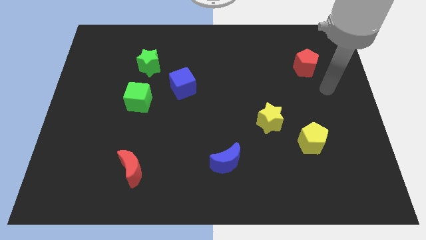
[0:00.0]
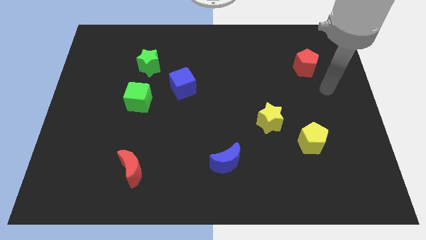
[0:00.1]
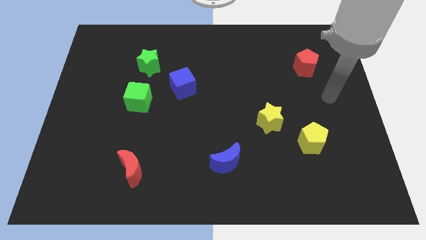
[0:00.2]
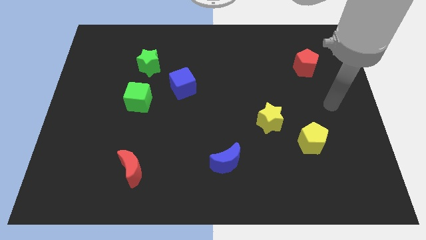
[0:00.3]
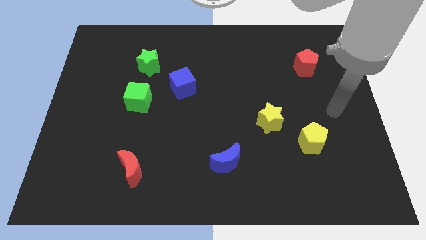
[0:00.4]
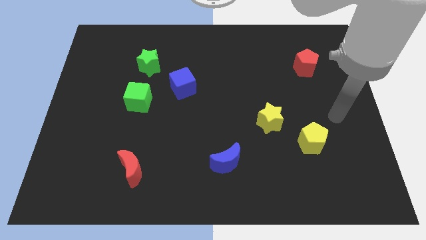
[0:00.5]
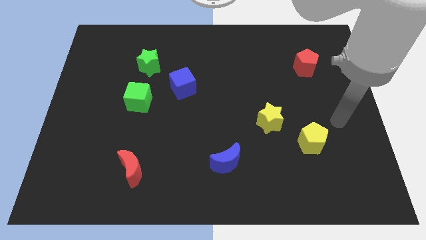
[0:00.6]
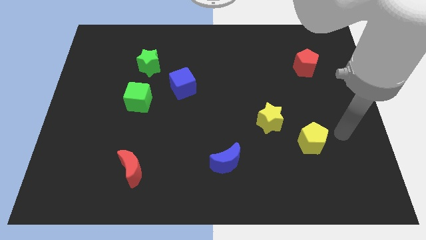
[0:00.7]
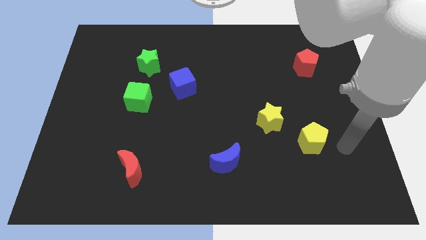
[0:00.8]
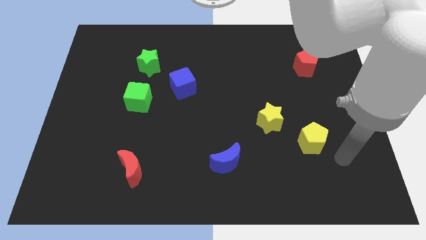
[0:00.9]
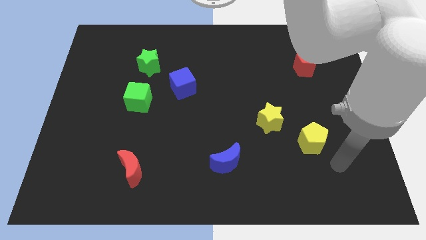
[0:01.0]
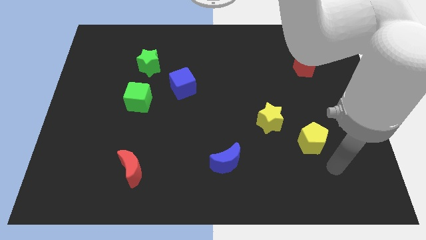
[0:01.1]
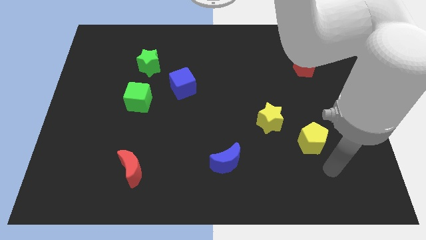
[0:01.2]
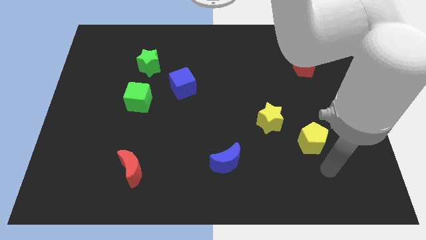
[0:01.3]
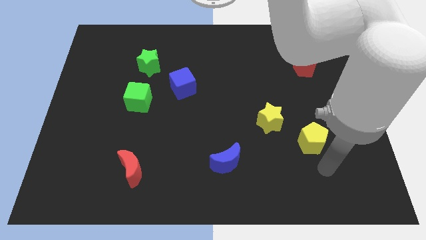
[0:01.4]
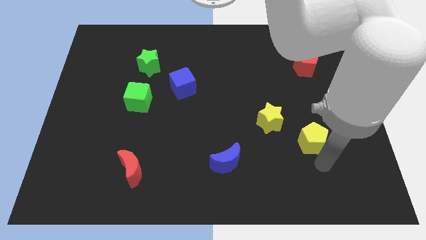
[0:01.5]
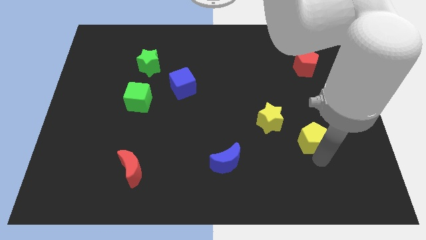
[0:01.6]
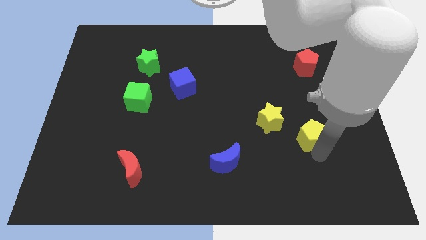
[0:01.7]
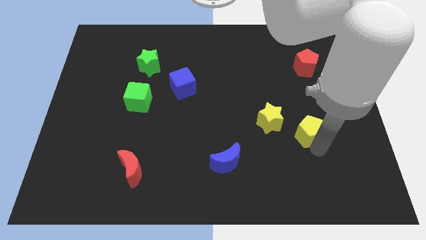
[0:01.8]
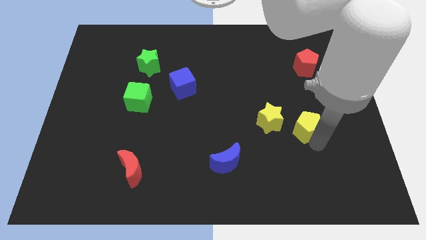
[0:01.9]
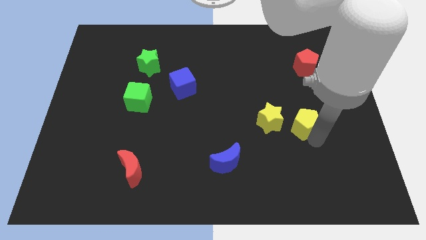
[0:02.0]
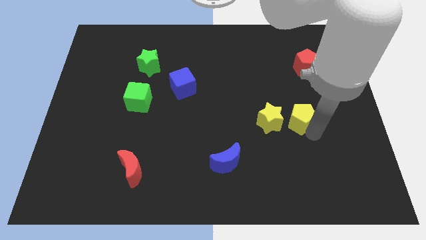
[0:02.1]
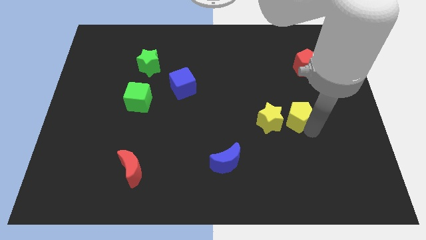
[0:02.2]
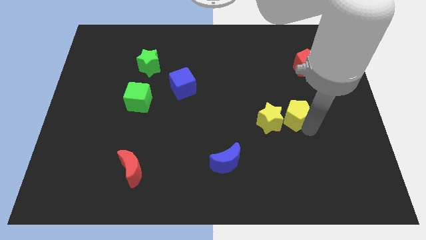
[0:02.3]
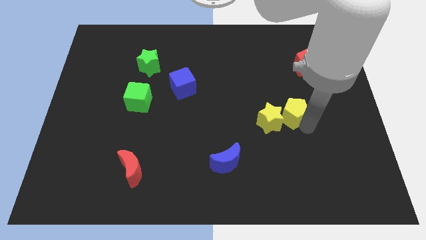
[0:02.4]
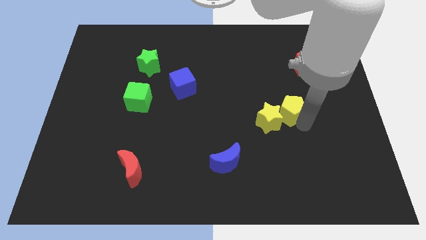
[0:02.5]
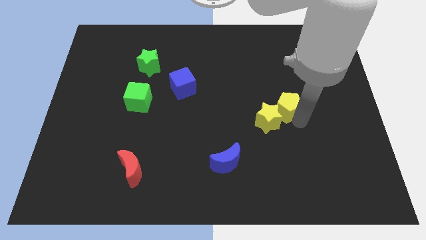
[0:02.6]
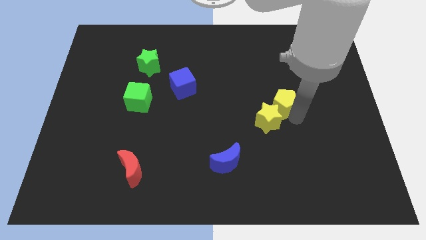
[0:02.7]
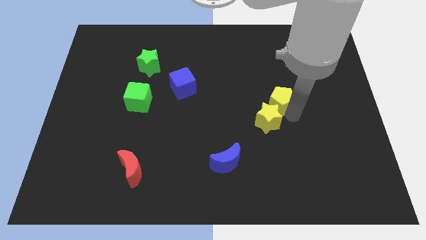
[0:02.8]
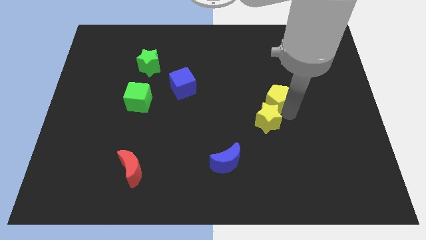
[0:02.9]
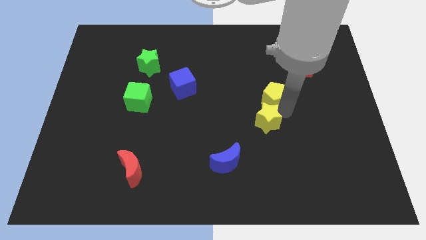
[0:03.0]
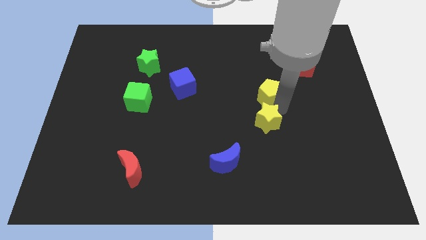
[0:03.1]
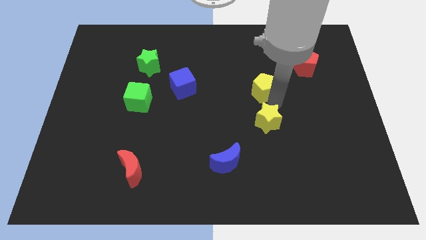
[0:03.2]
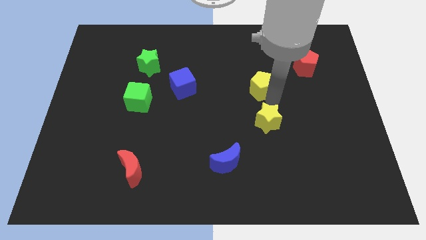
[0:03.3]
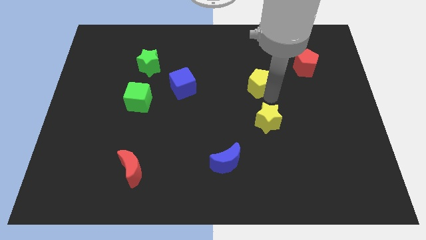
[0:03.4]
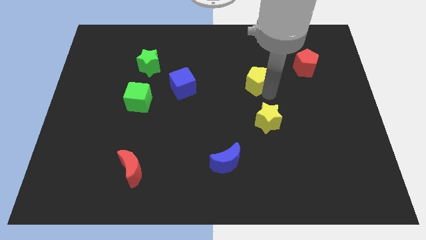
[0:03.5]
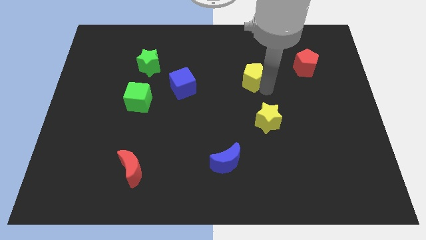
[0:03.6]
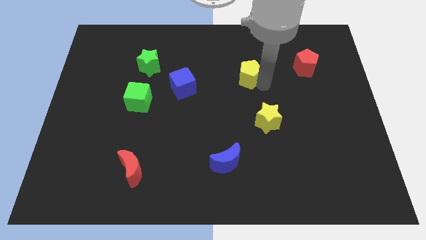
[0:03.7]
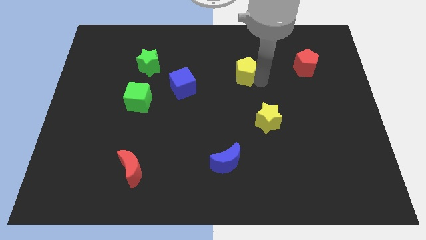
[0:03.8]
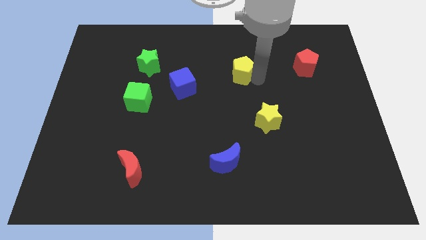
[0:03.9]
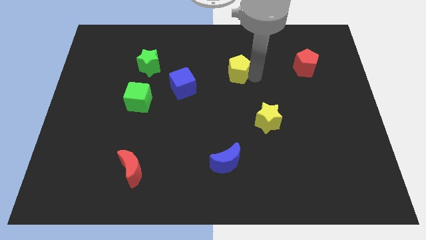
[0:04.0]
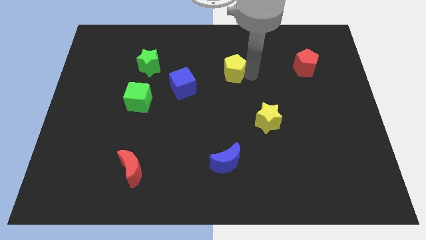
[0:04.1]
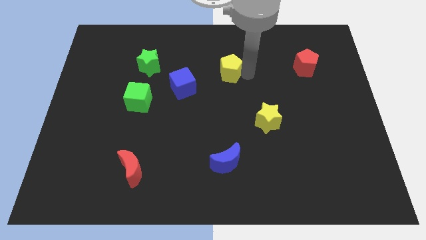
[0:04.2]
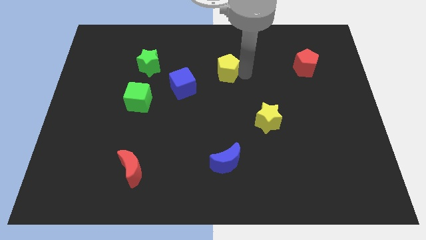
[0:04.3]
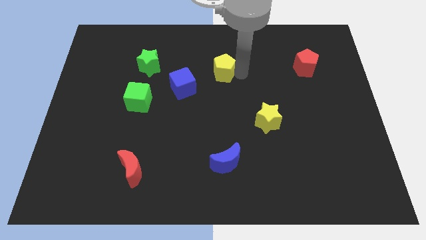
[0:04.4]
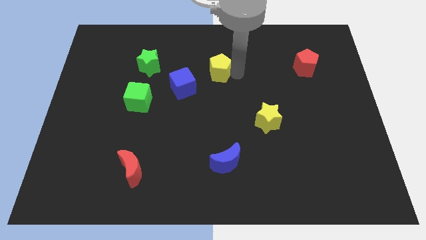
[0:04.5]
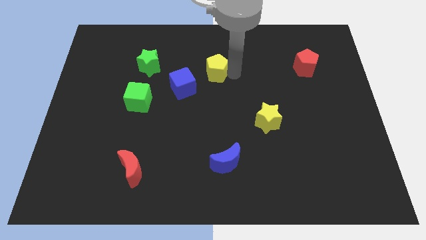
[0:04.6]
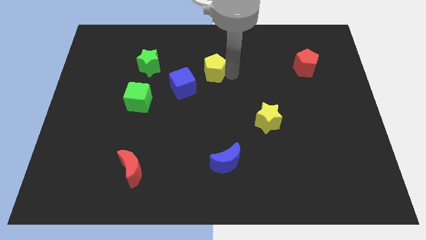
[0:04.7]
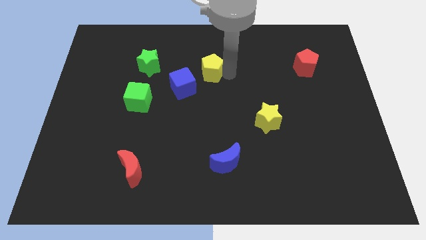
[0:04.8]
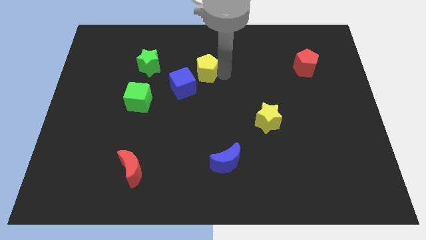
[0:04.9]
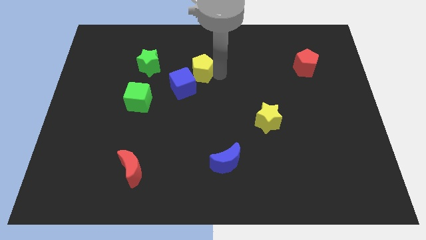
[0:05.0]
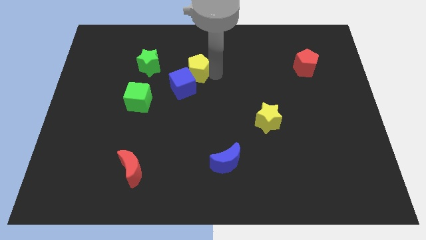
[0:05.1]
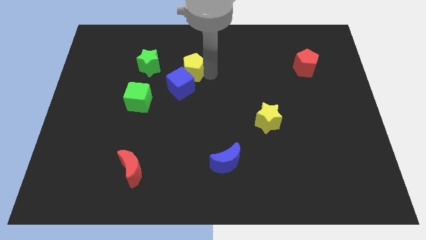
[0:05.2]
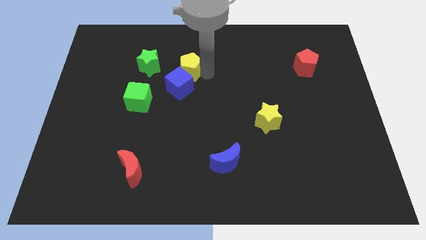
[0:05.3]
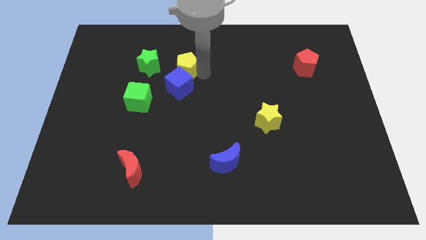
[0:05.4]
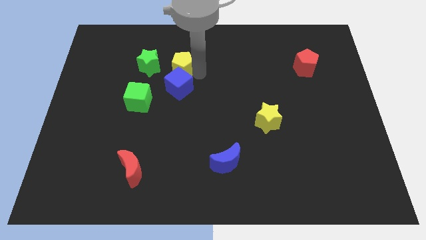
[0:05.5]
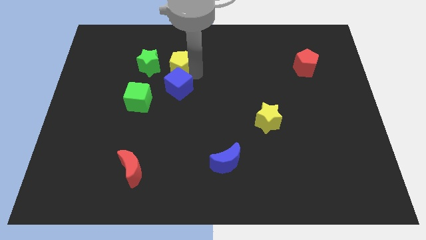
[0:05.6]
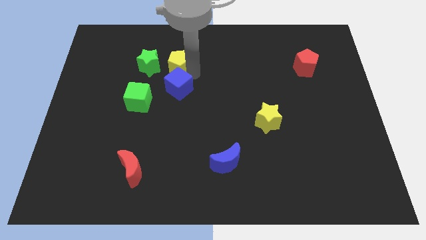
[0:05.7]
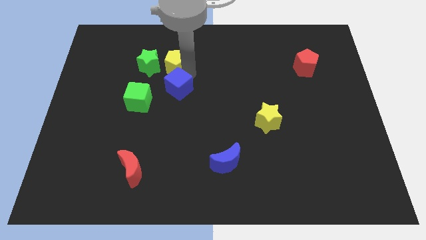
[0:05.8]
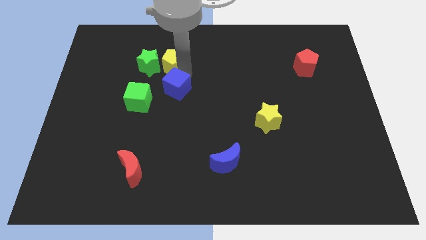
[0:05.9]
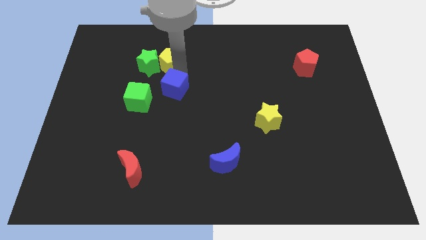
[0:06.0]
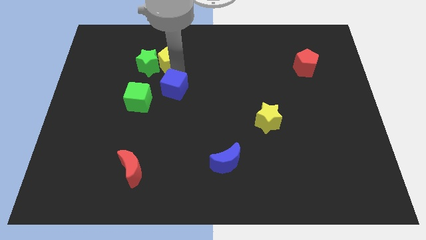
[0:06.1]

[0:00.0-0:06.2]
move the yellow pentagon next to the green star

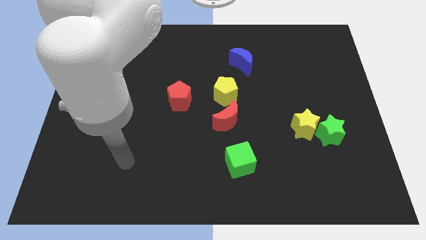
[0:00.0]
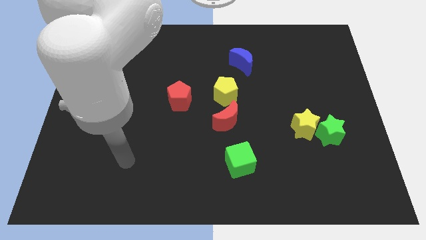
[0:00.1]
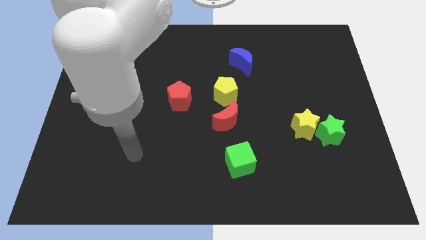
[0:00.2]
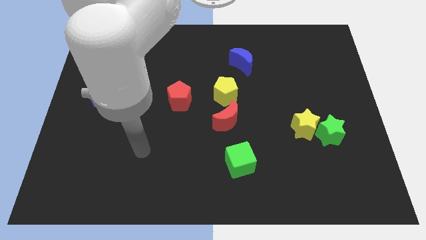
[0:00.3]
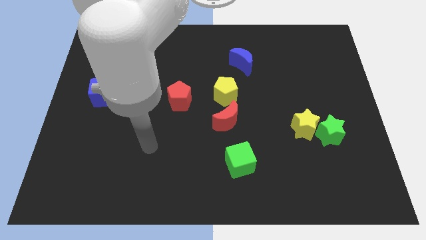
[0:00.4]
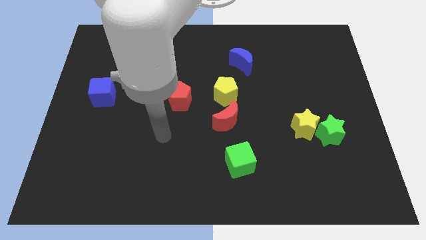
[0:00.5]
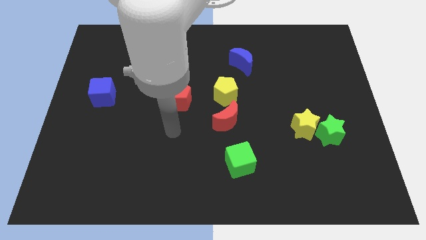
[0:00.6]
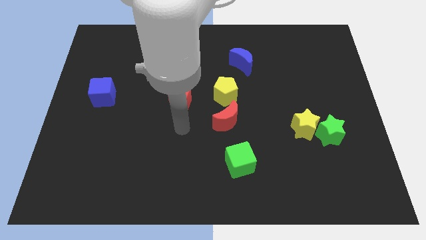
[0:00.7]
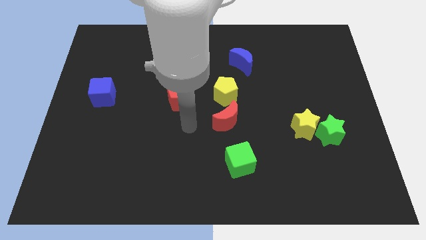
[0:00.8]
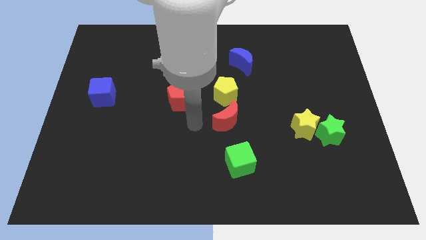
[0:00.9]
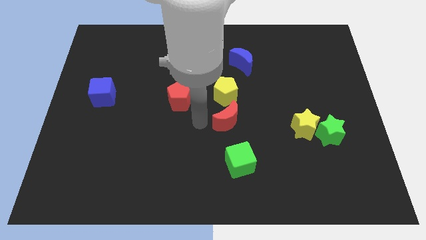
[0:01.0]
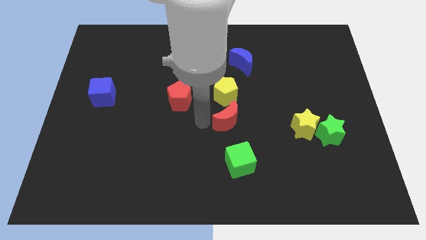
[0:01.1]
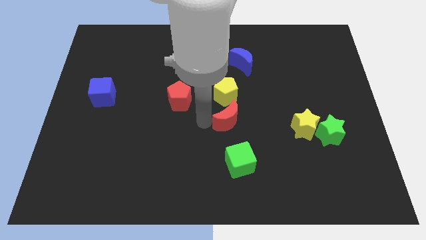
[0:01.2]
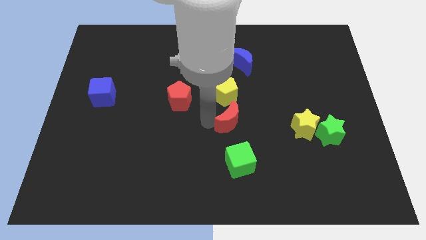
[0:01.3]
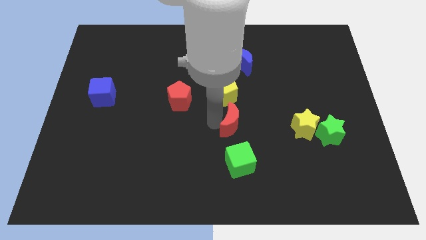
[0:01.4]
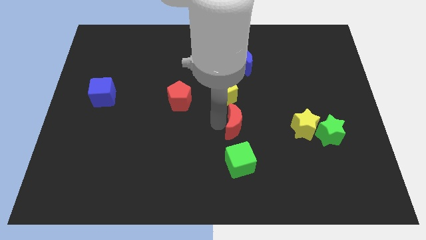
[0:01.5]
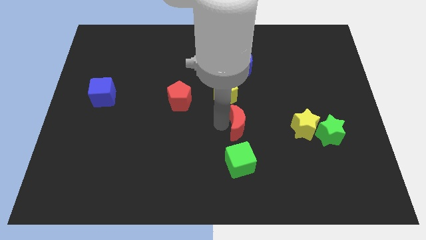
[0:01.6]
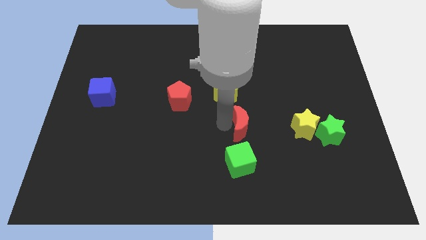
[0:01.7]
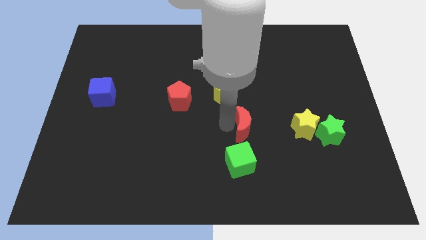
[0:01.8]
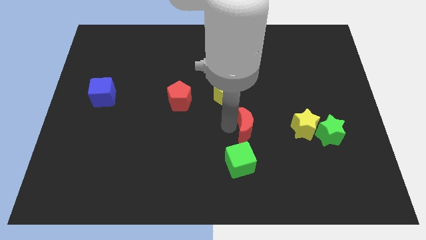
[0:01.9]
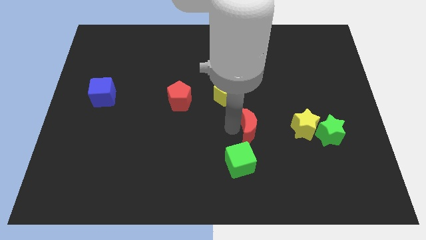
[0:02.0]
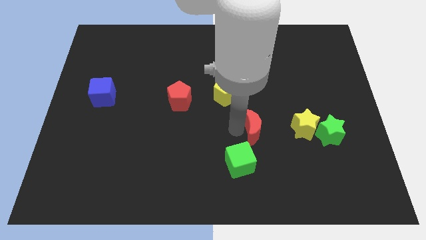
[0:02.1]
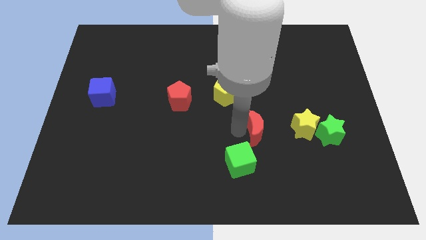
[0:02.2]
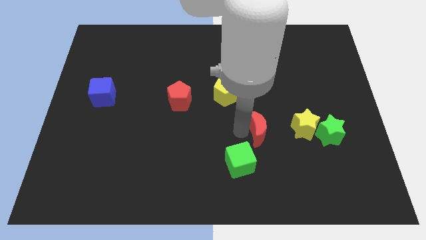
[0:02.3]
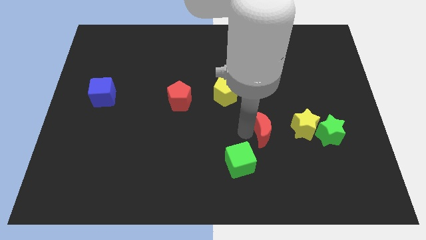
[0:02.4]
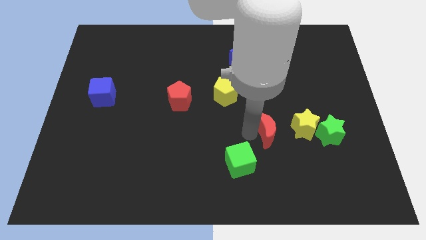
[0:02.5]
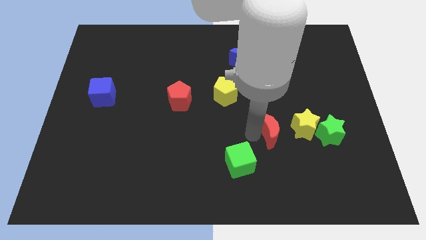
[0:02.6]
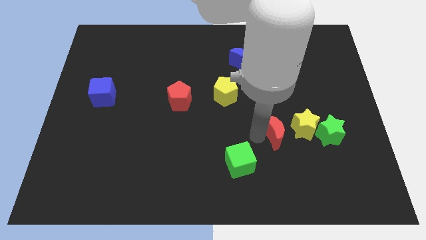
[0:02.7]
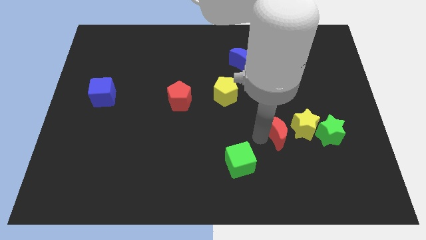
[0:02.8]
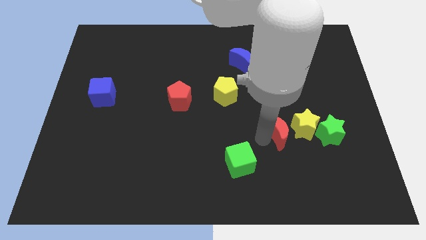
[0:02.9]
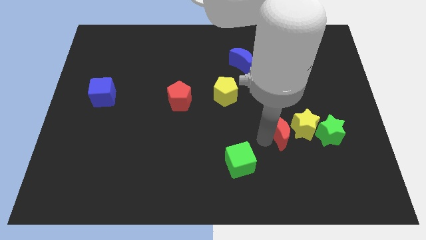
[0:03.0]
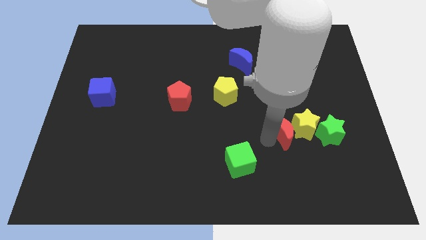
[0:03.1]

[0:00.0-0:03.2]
put the red moon close to the yellow star
